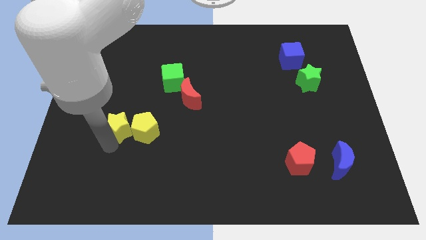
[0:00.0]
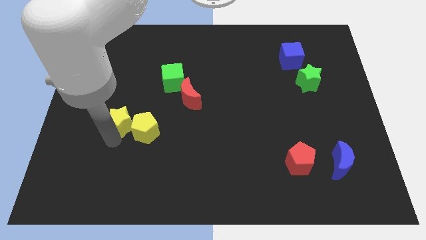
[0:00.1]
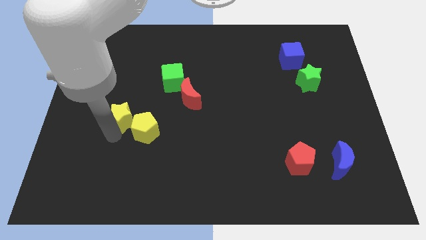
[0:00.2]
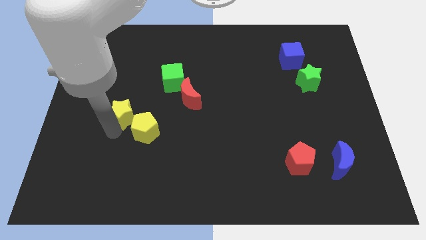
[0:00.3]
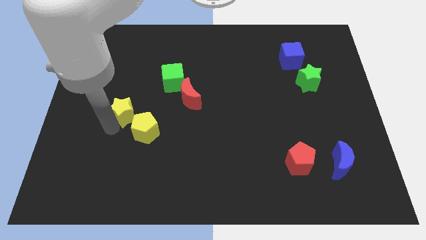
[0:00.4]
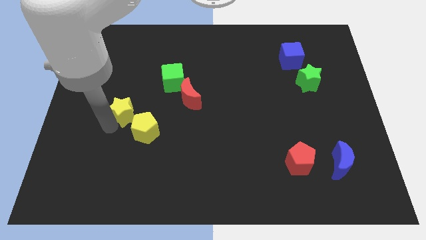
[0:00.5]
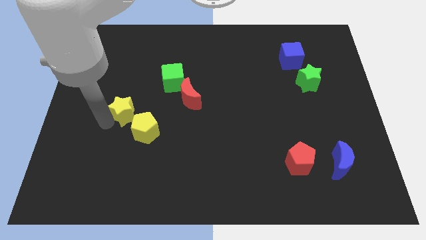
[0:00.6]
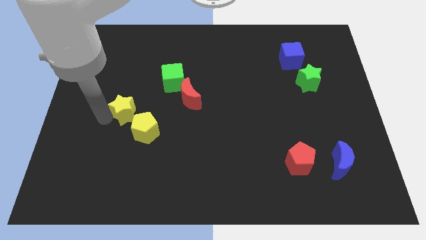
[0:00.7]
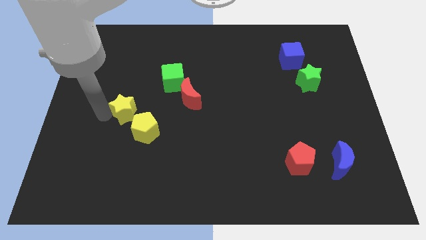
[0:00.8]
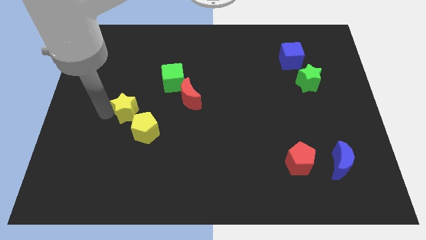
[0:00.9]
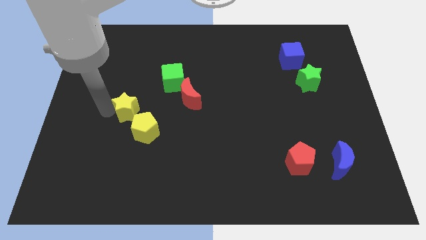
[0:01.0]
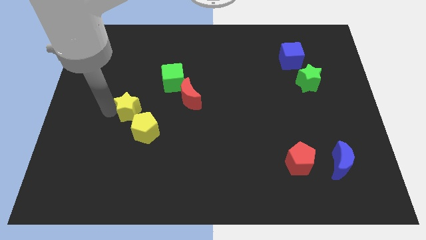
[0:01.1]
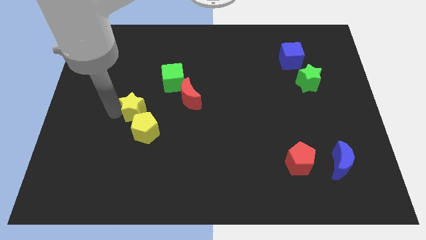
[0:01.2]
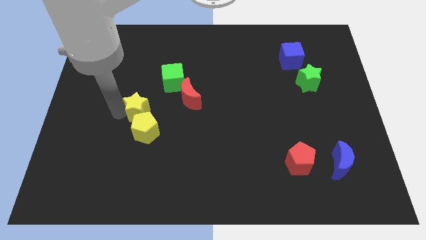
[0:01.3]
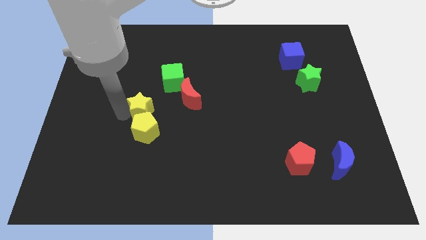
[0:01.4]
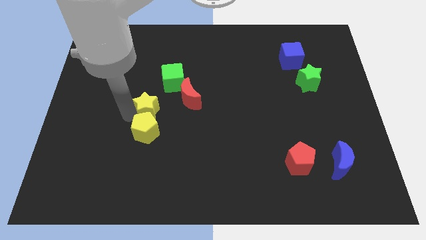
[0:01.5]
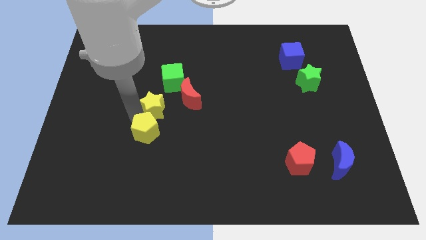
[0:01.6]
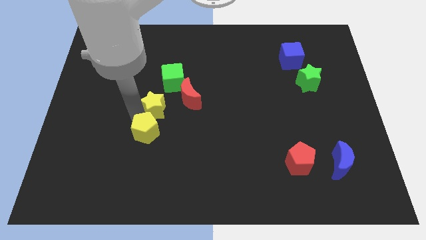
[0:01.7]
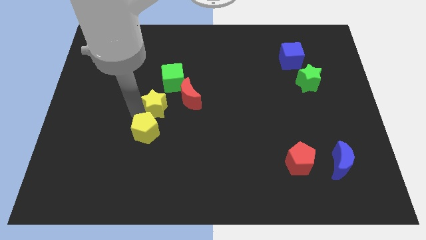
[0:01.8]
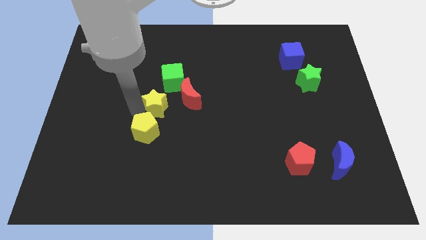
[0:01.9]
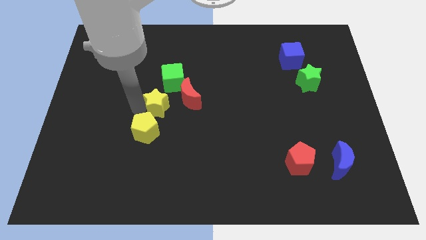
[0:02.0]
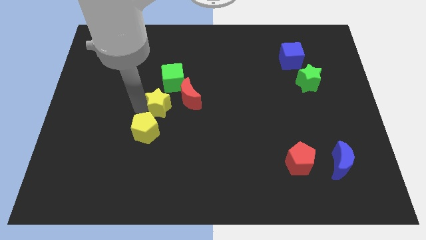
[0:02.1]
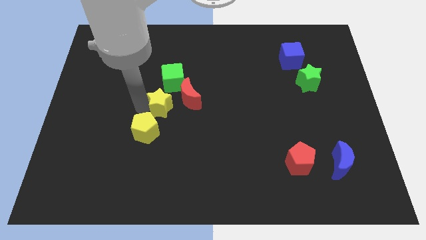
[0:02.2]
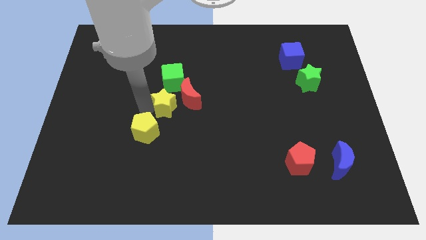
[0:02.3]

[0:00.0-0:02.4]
move the yellow star to the left of the red crescent

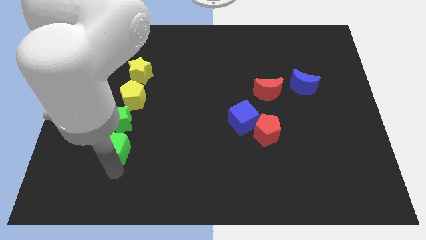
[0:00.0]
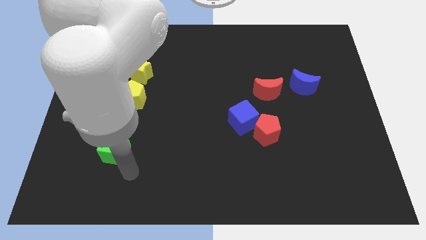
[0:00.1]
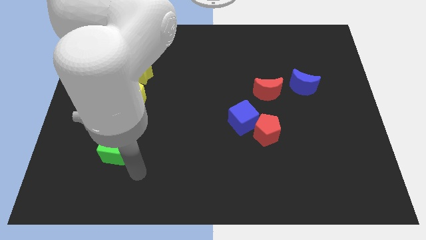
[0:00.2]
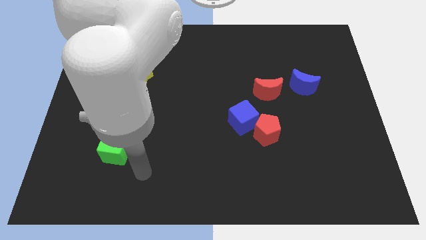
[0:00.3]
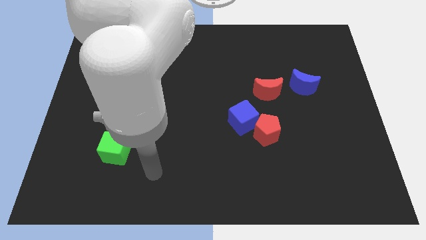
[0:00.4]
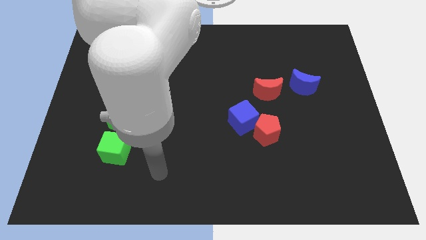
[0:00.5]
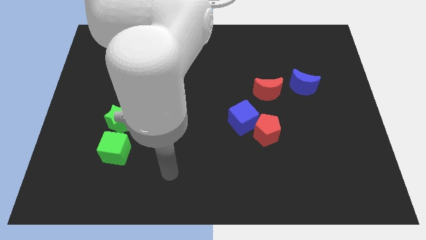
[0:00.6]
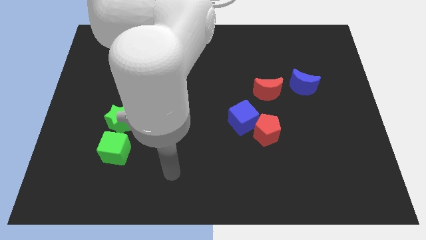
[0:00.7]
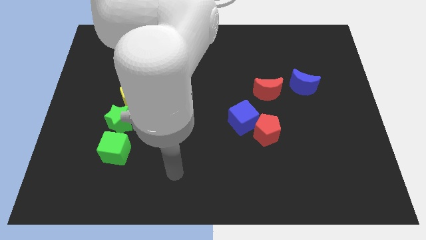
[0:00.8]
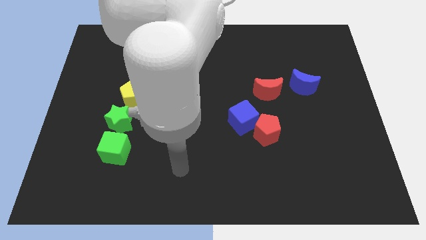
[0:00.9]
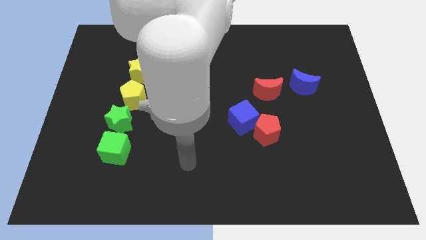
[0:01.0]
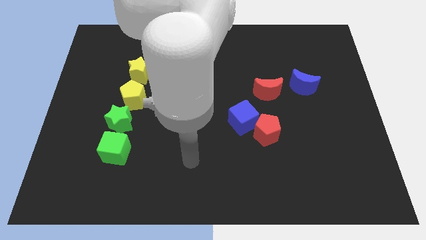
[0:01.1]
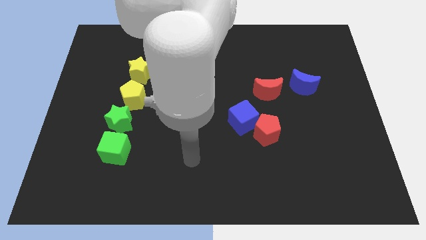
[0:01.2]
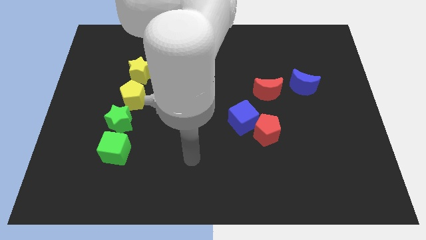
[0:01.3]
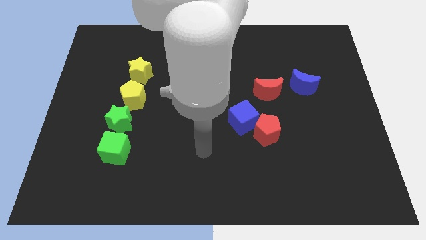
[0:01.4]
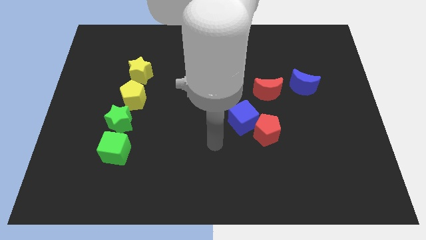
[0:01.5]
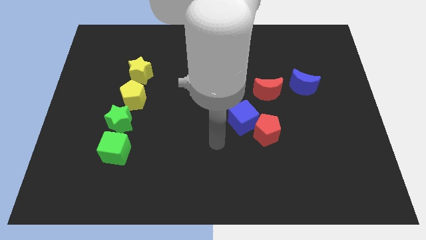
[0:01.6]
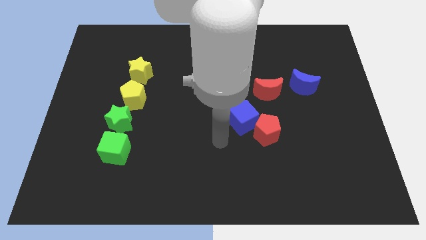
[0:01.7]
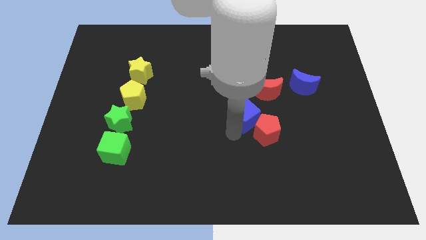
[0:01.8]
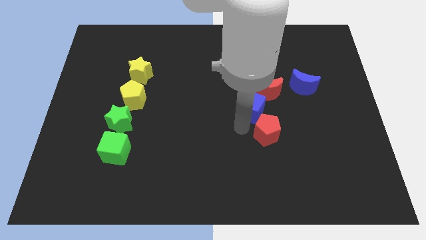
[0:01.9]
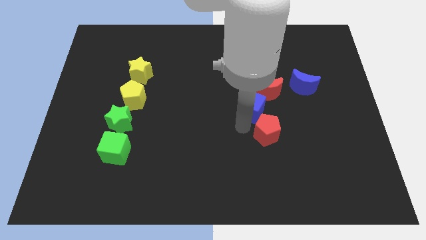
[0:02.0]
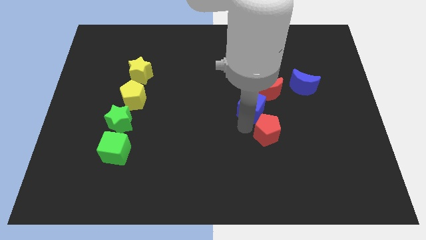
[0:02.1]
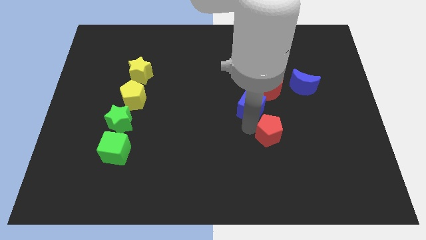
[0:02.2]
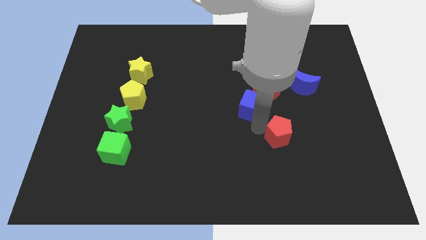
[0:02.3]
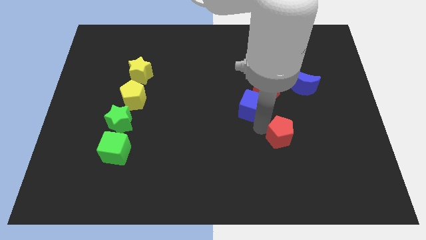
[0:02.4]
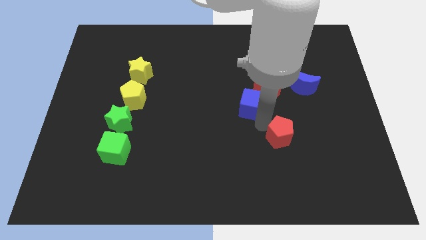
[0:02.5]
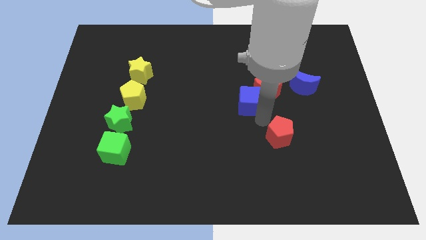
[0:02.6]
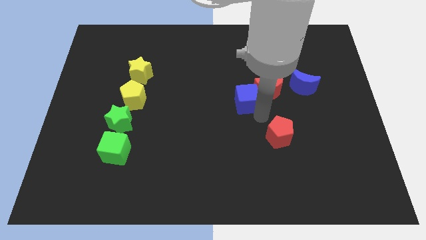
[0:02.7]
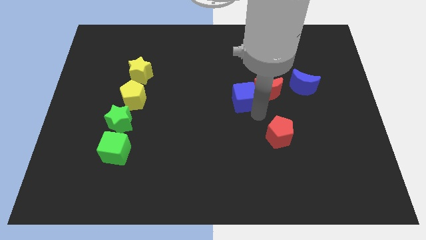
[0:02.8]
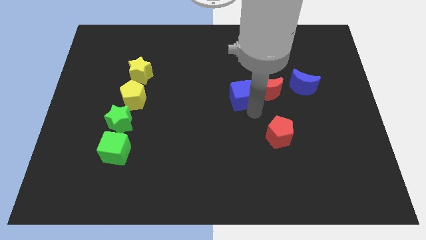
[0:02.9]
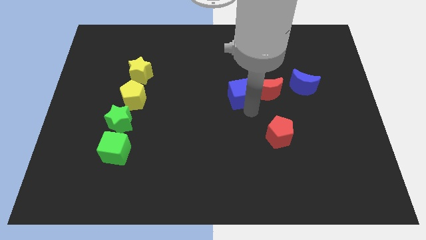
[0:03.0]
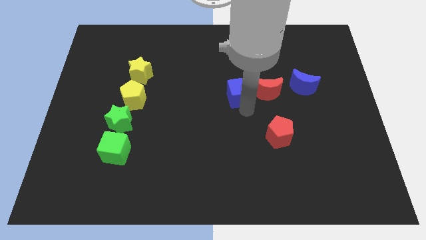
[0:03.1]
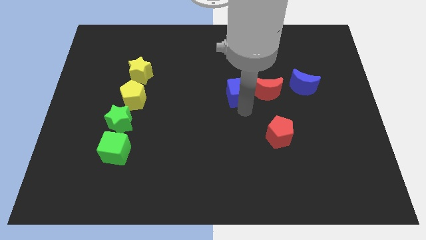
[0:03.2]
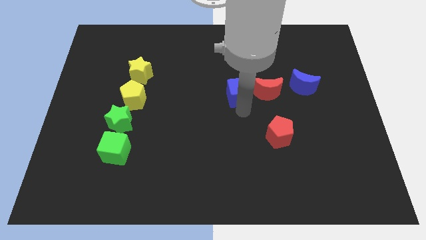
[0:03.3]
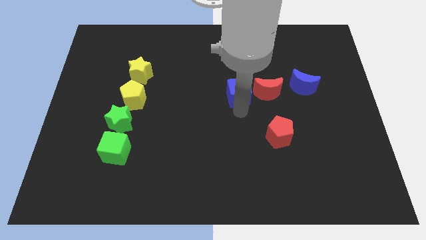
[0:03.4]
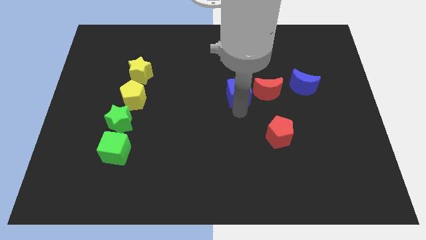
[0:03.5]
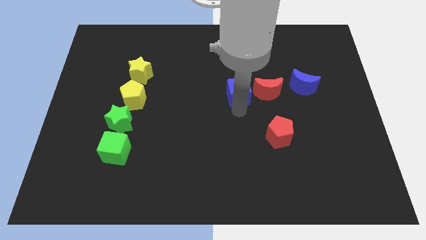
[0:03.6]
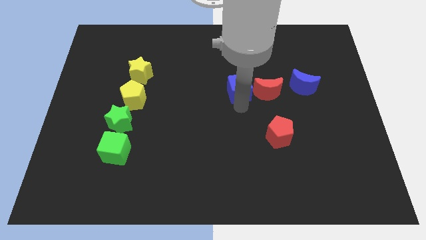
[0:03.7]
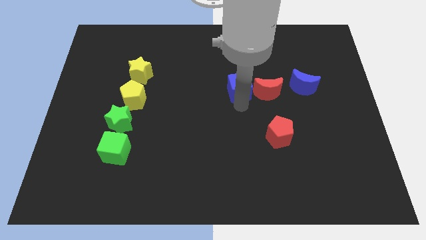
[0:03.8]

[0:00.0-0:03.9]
place the arm down to the blue cube

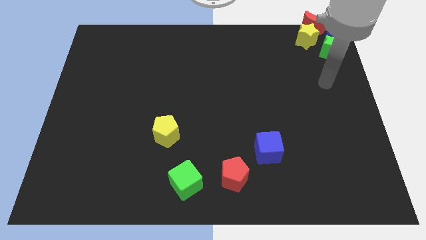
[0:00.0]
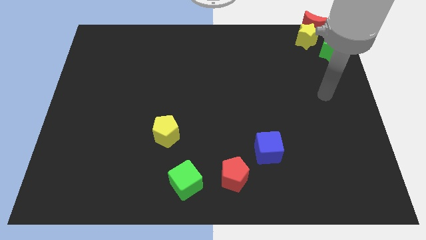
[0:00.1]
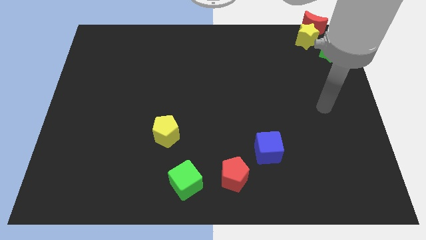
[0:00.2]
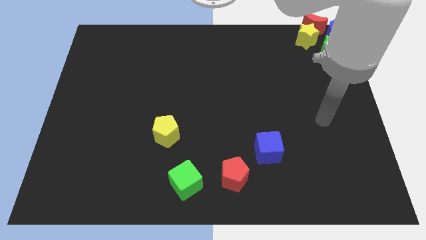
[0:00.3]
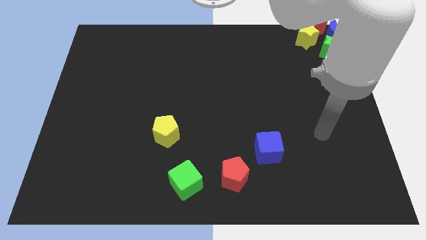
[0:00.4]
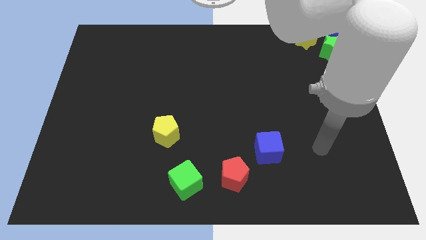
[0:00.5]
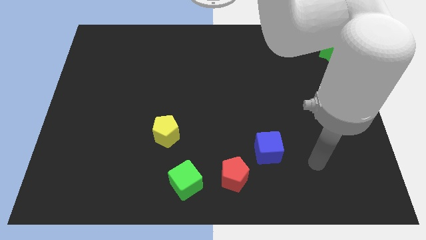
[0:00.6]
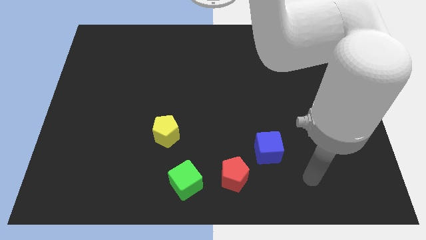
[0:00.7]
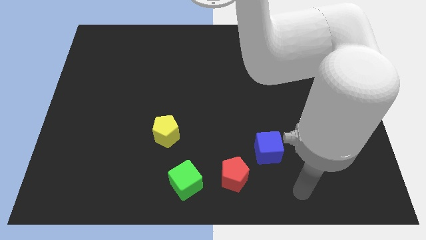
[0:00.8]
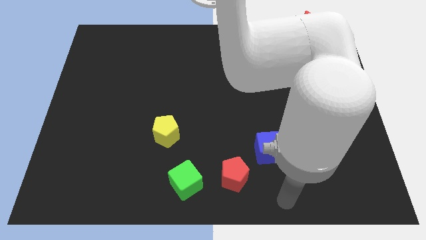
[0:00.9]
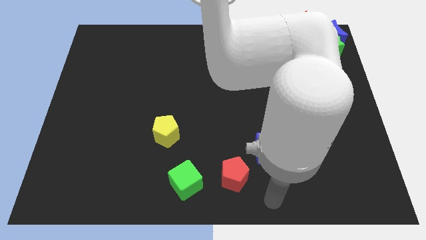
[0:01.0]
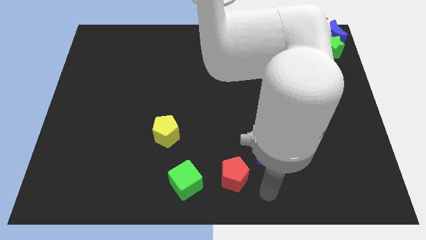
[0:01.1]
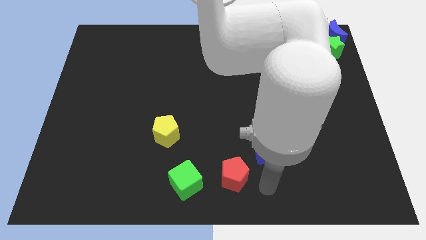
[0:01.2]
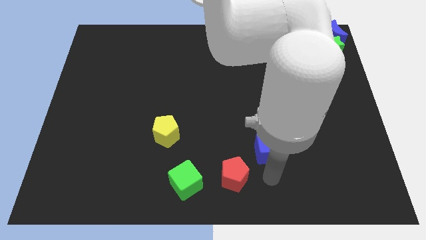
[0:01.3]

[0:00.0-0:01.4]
point your arm at the bottom of the blue cube

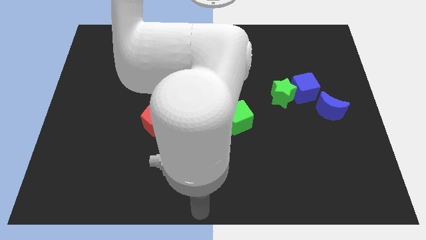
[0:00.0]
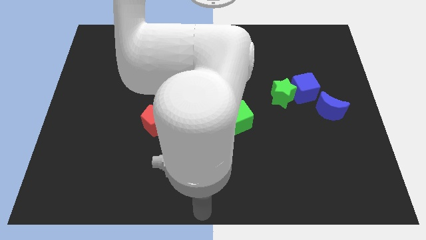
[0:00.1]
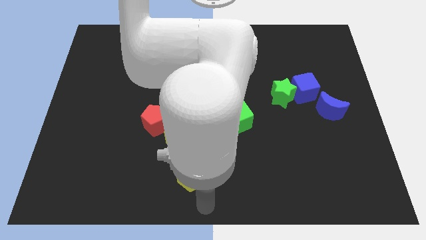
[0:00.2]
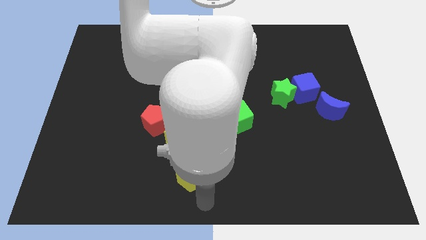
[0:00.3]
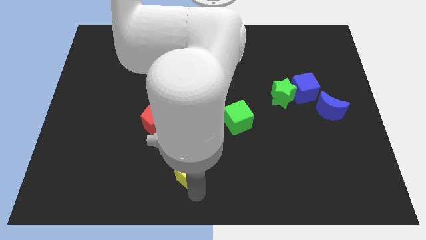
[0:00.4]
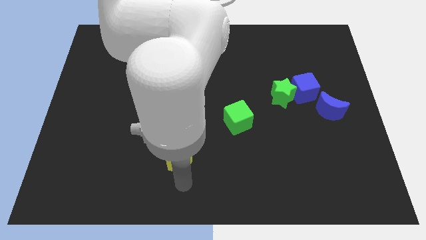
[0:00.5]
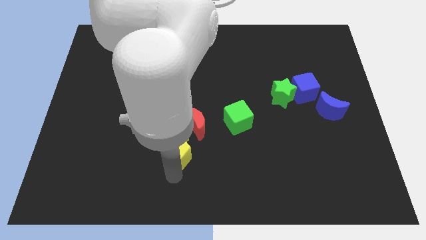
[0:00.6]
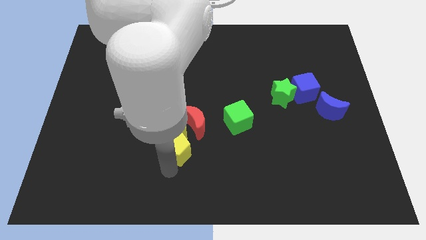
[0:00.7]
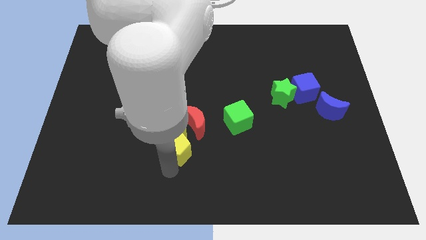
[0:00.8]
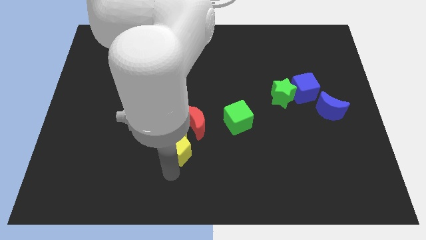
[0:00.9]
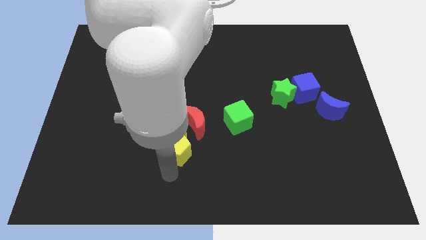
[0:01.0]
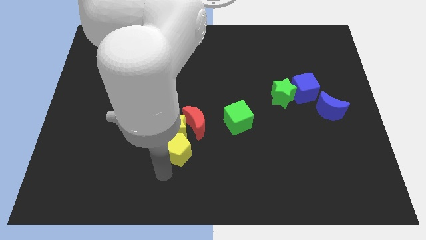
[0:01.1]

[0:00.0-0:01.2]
push the yellow pentagon into the yellow star
